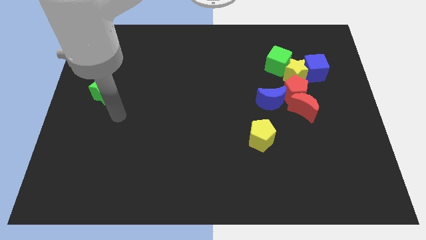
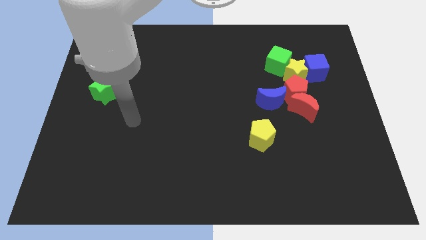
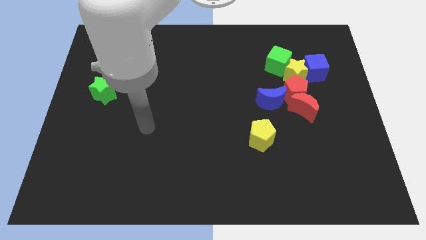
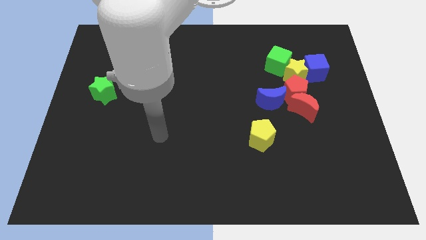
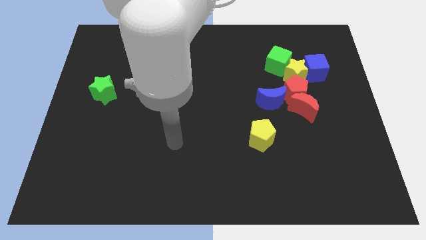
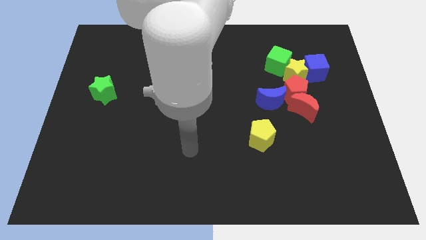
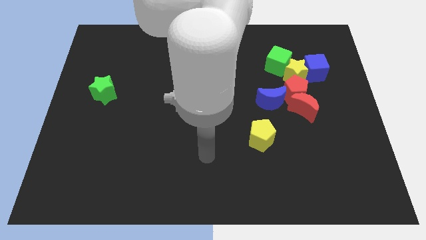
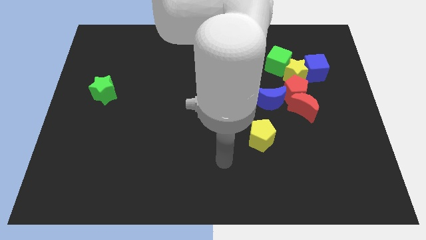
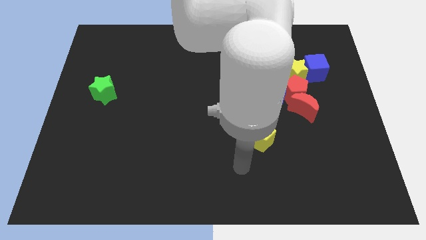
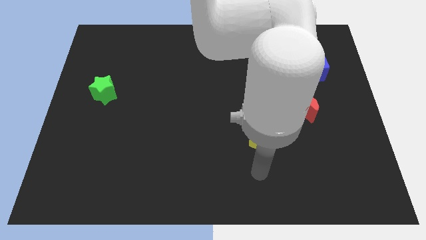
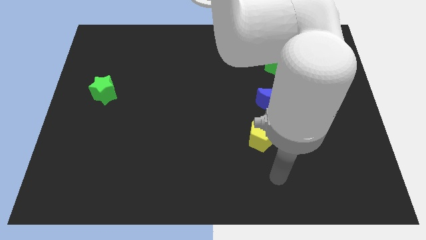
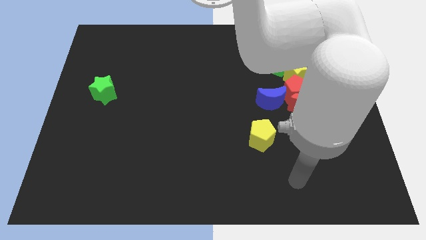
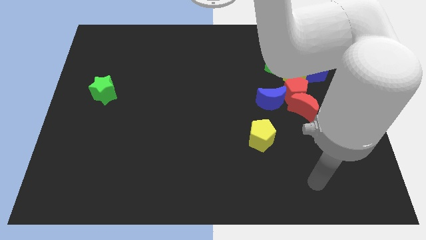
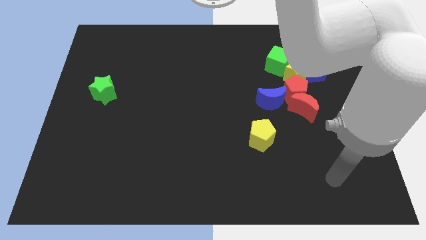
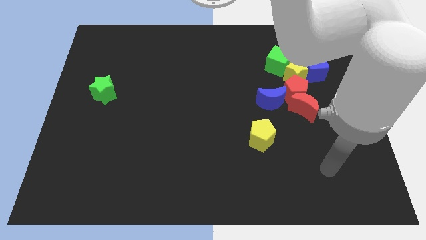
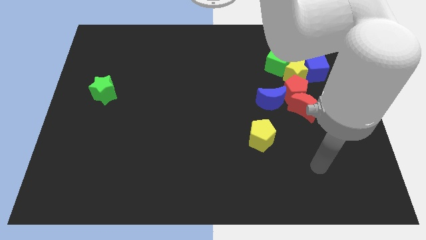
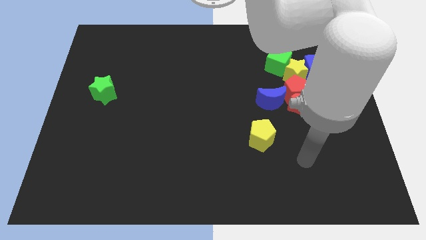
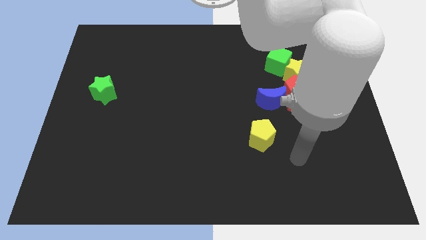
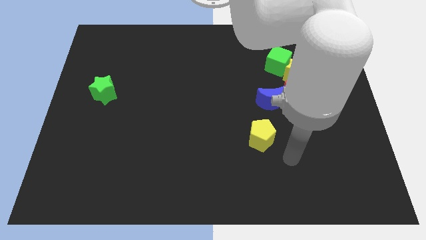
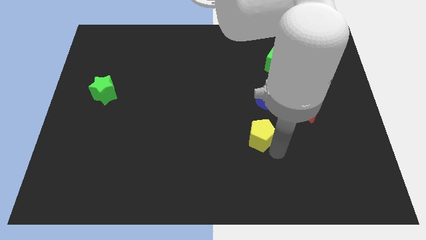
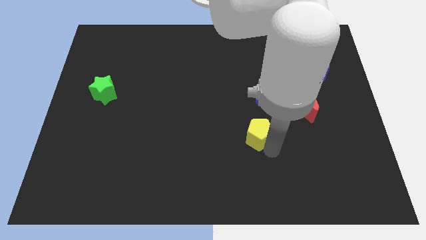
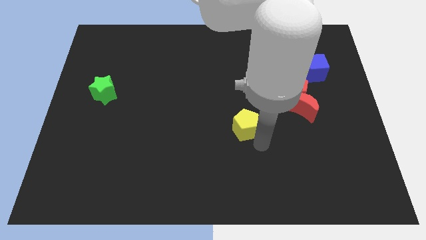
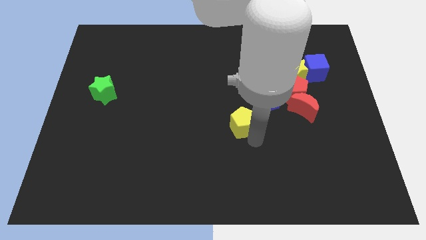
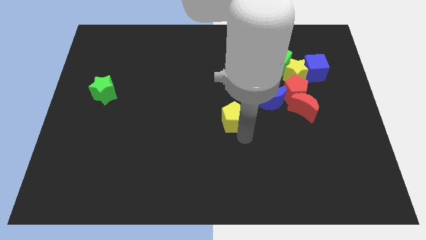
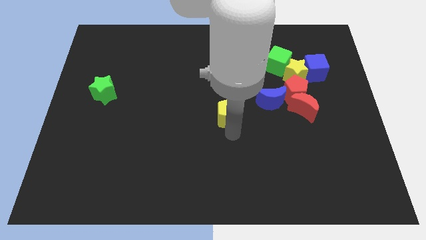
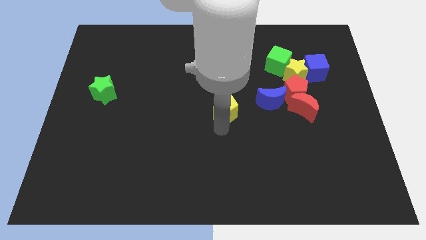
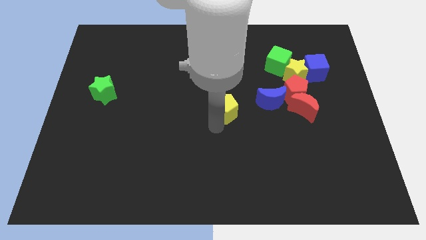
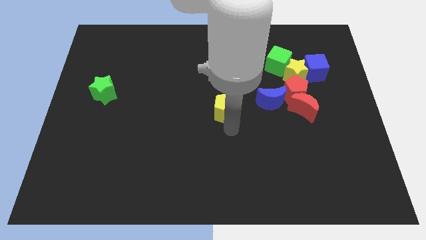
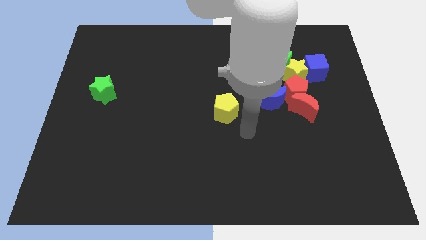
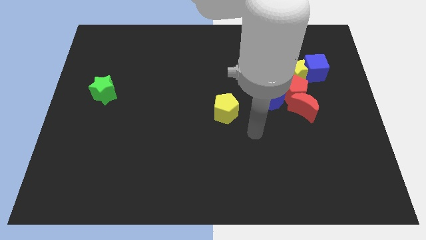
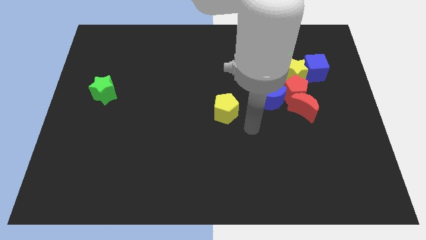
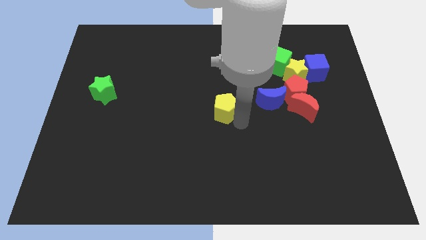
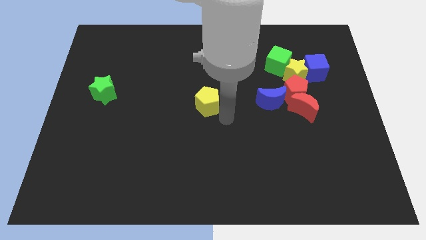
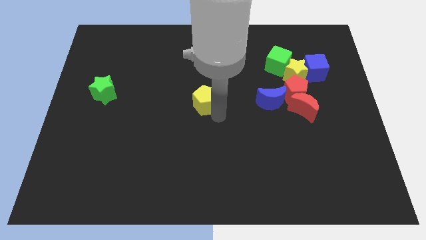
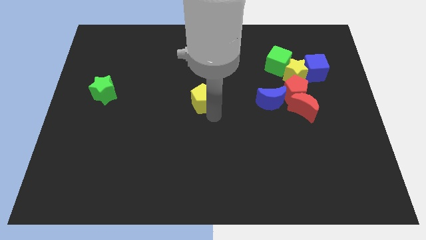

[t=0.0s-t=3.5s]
move the yellow pentagon towards the center of the board

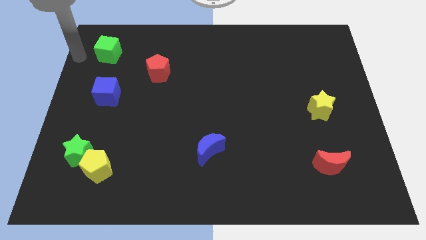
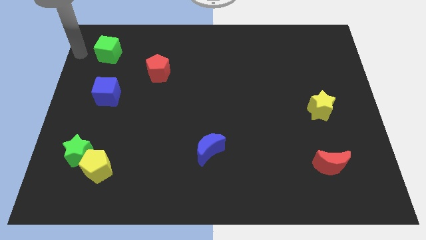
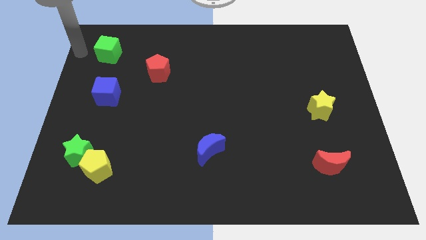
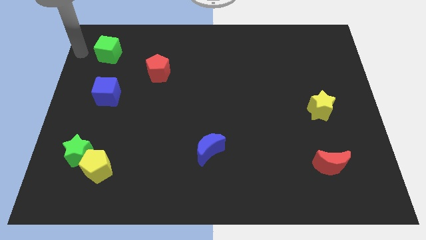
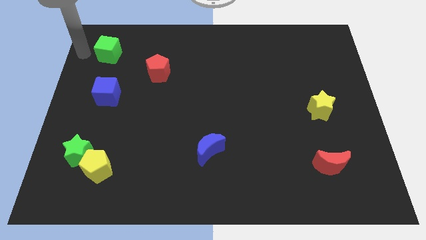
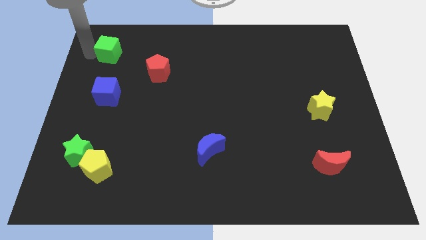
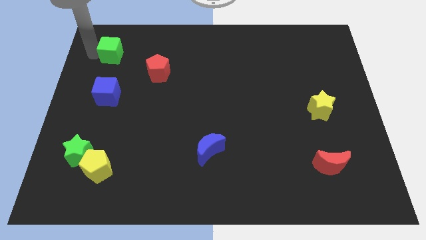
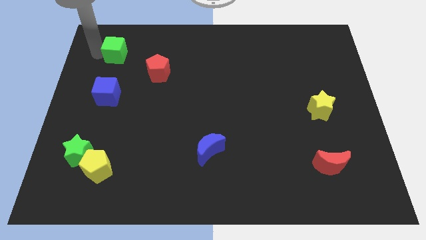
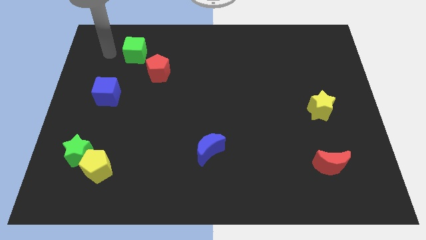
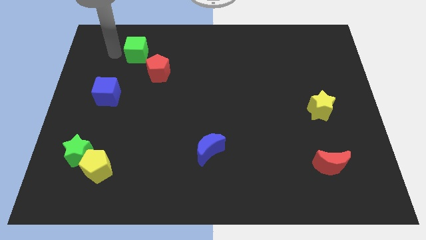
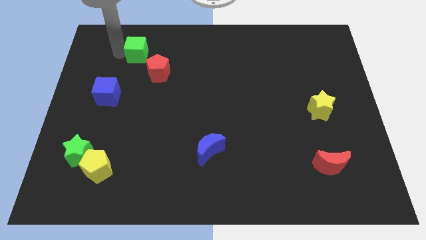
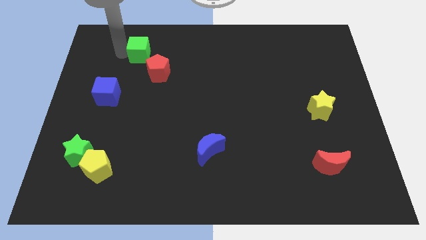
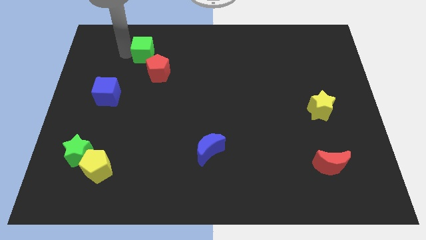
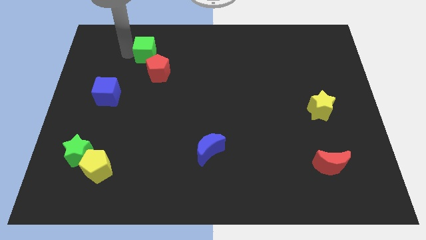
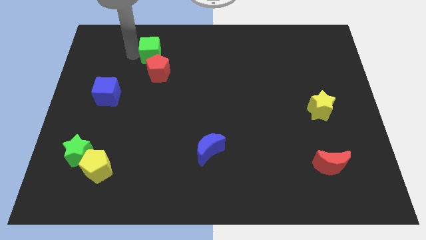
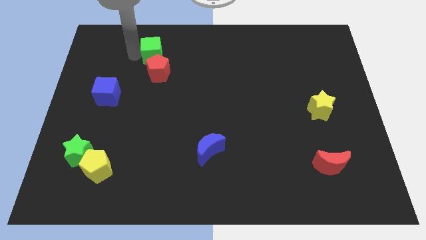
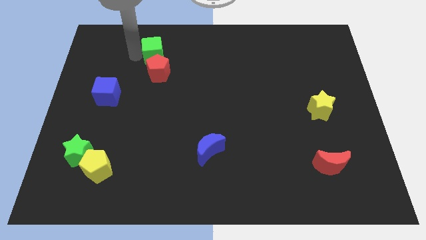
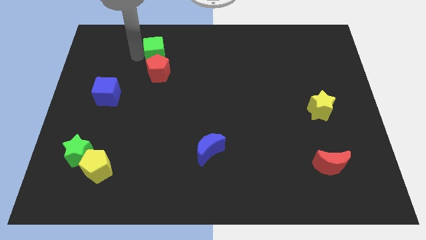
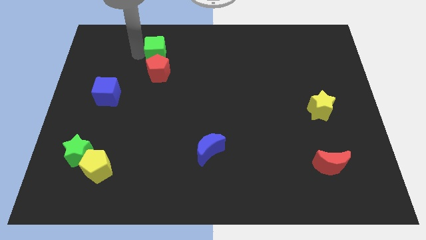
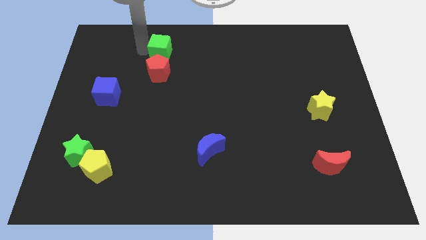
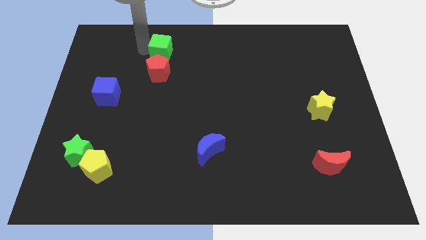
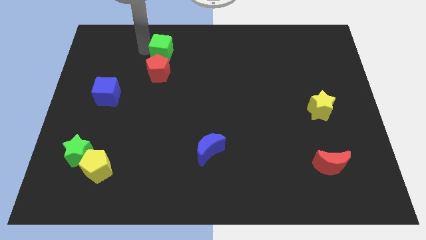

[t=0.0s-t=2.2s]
place green cube to the top of red pentagon

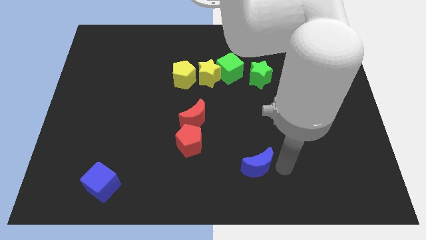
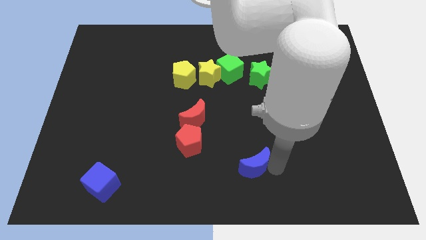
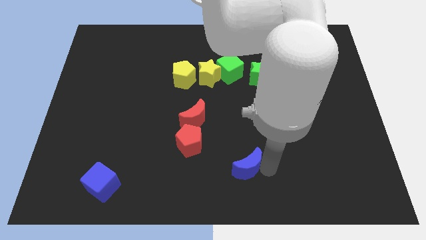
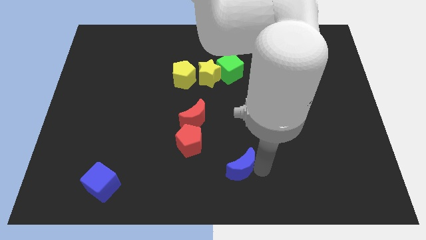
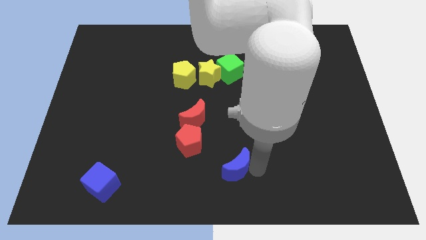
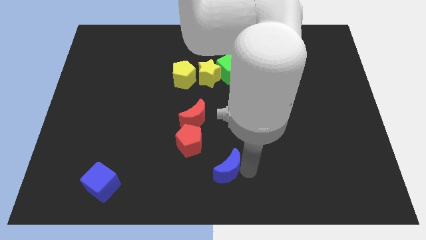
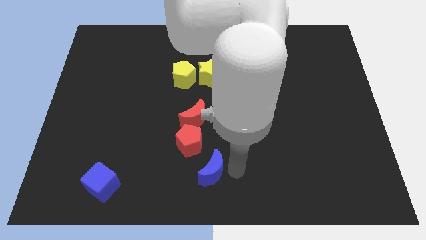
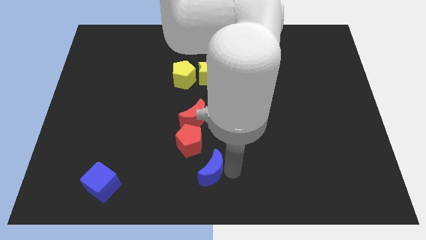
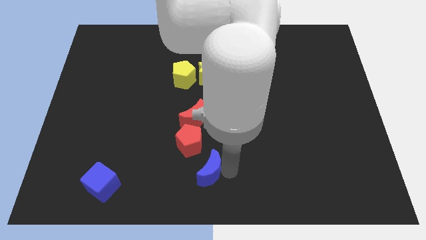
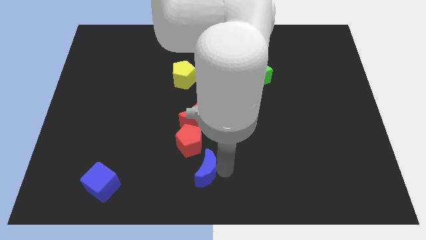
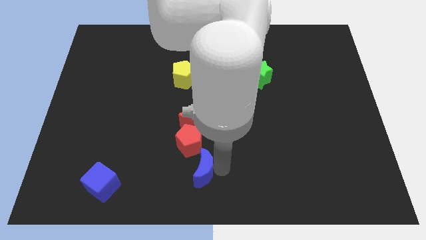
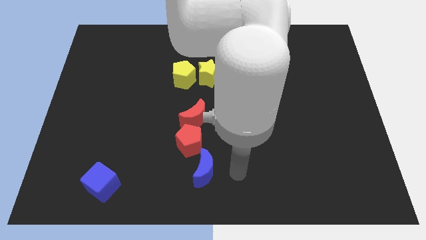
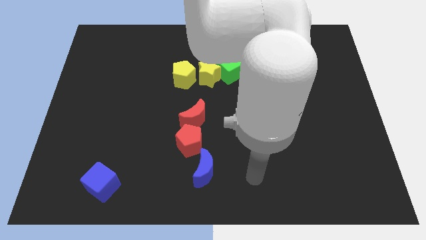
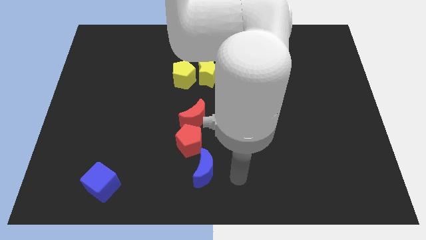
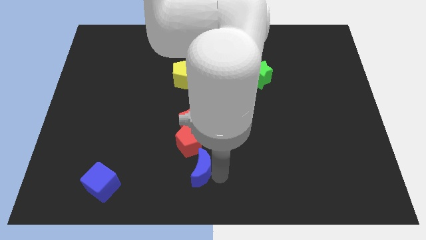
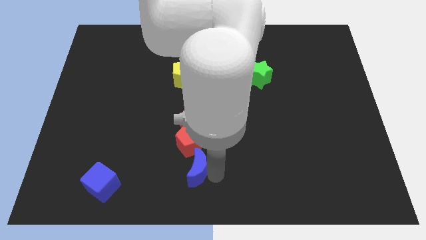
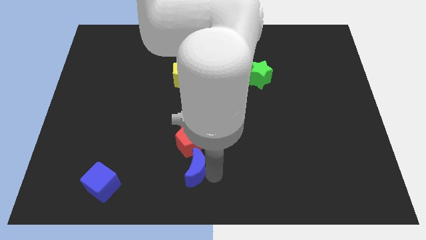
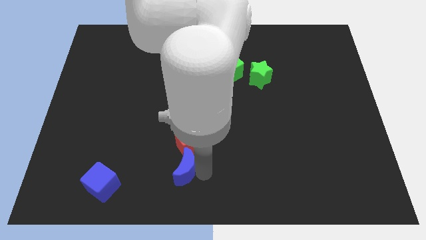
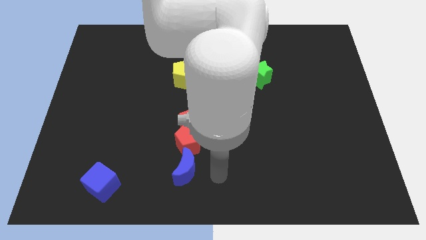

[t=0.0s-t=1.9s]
push the blue crescent towards the below of red pentagon

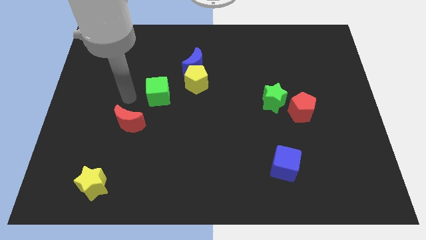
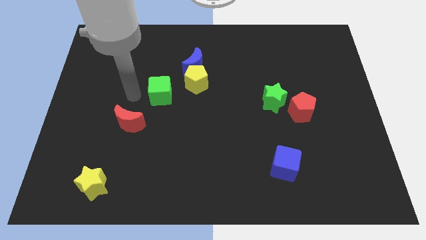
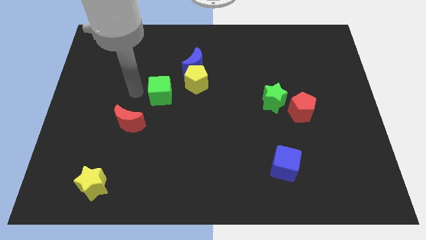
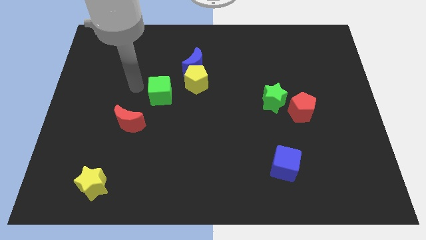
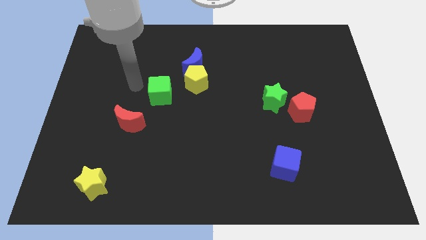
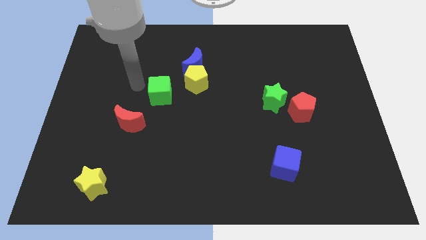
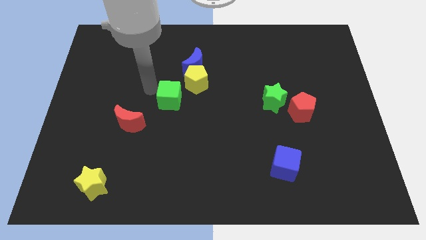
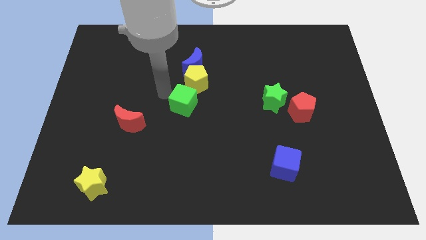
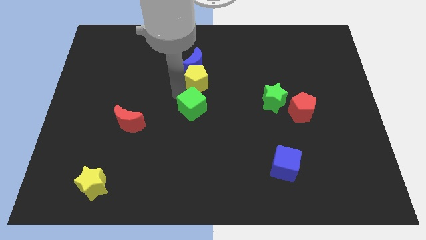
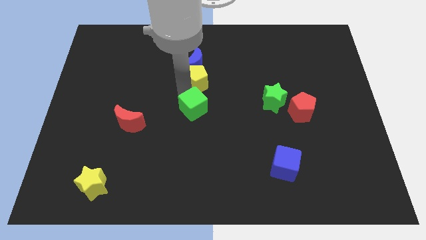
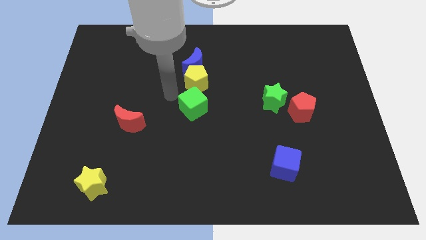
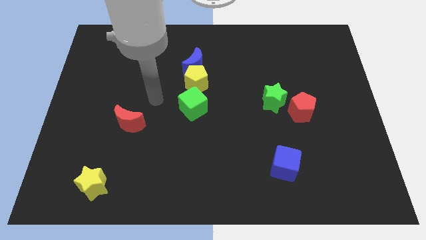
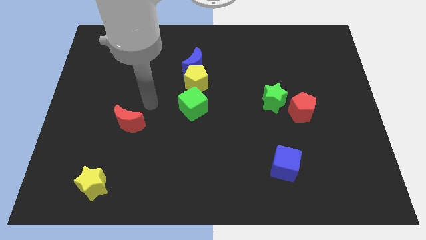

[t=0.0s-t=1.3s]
move the green cube below the yellow pentagon

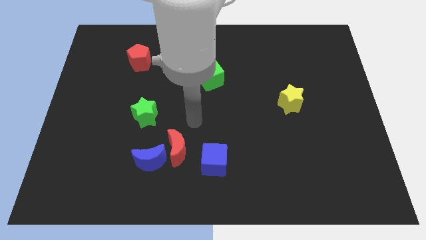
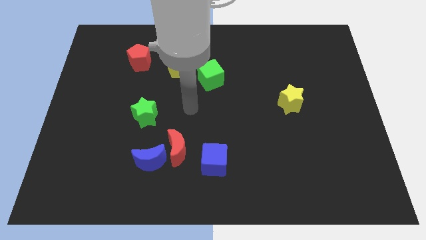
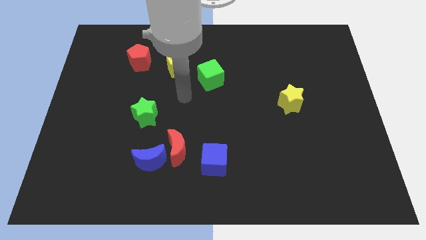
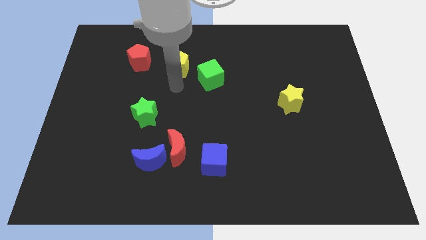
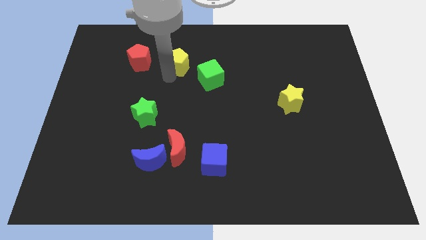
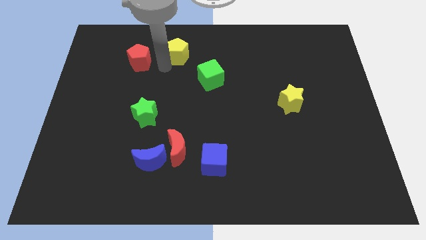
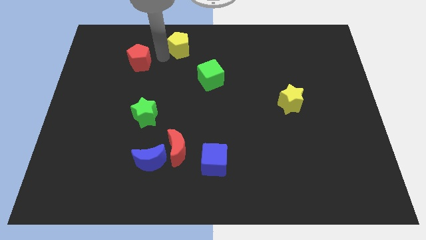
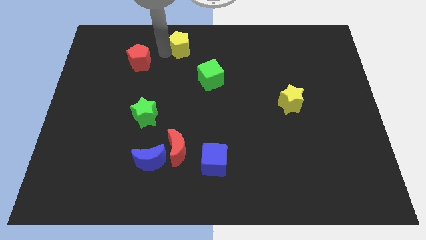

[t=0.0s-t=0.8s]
move the yellow pentagon towards the top
